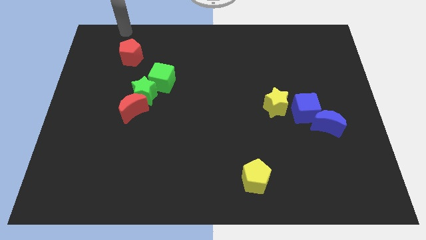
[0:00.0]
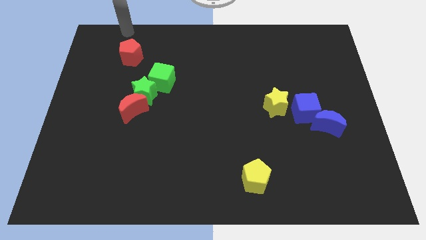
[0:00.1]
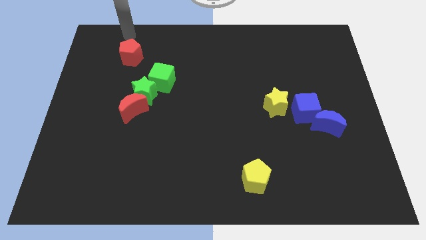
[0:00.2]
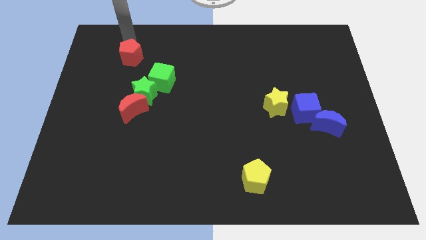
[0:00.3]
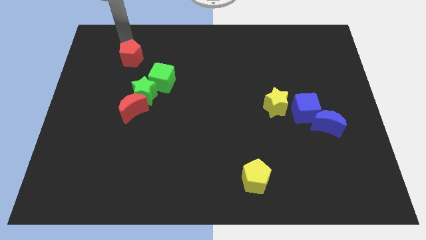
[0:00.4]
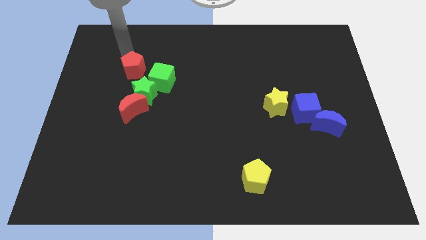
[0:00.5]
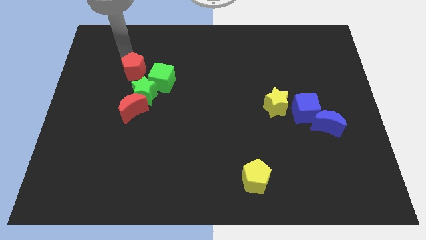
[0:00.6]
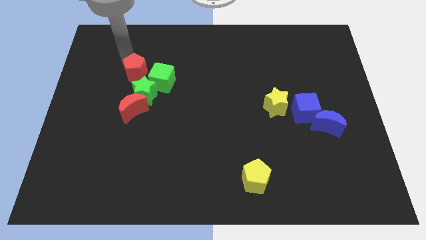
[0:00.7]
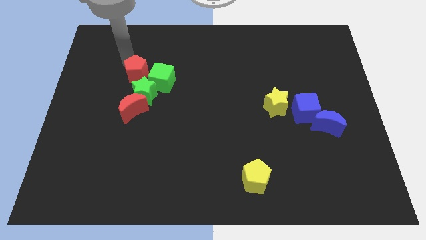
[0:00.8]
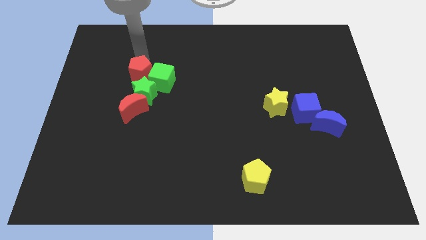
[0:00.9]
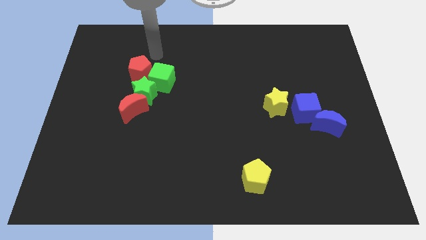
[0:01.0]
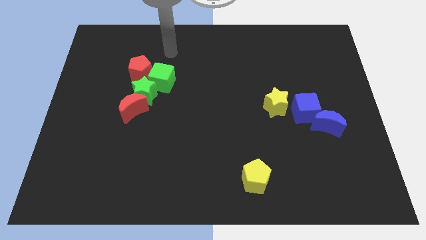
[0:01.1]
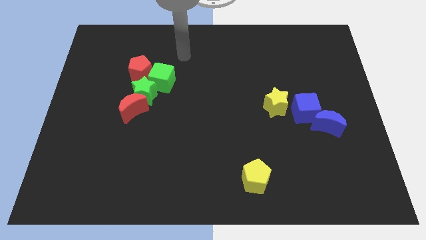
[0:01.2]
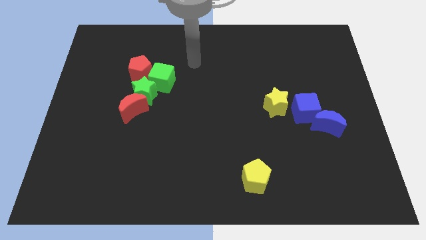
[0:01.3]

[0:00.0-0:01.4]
push the red pentagon towards the green cube

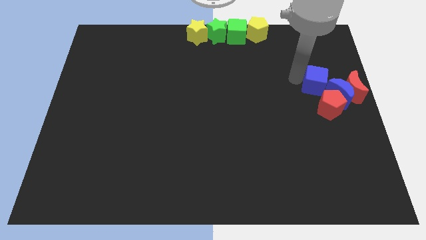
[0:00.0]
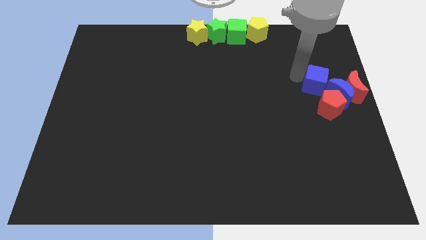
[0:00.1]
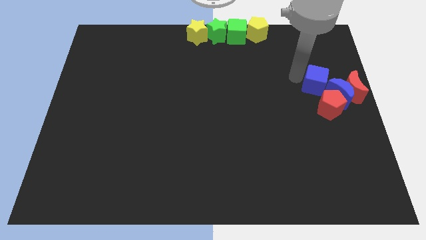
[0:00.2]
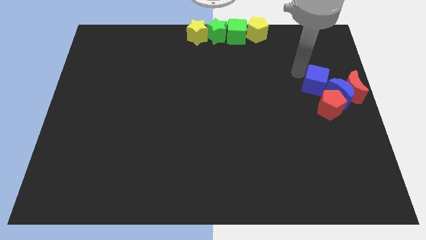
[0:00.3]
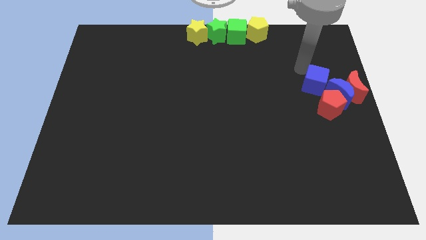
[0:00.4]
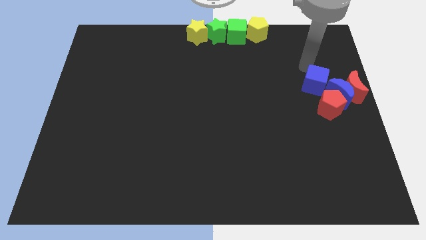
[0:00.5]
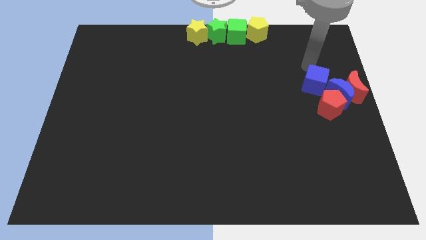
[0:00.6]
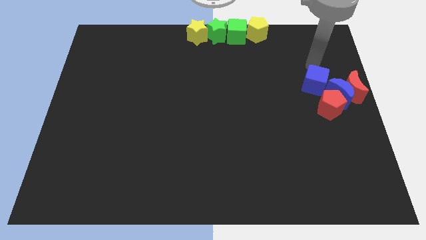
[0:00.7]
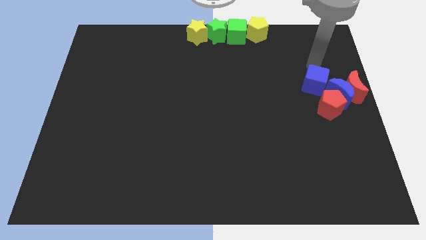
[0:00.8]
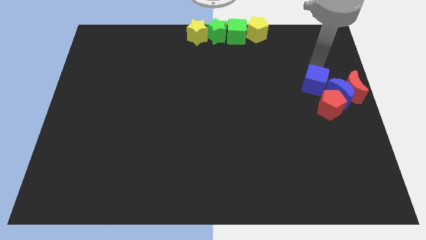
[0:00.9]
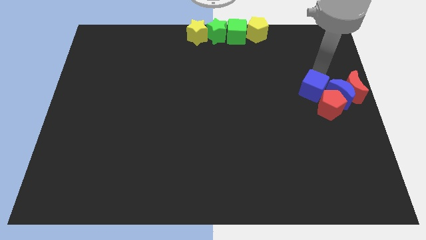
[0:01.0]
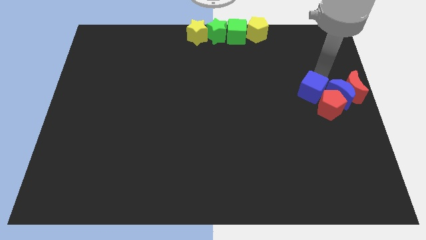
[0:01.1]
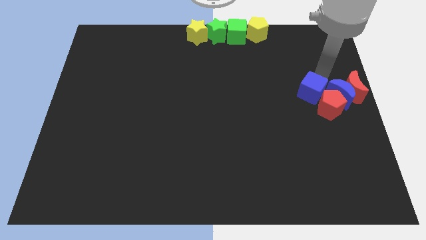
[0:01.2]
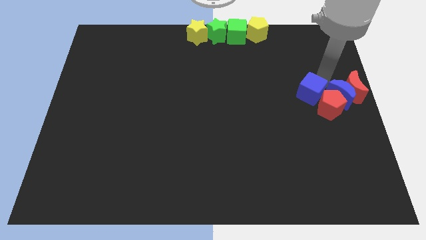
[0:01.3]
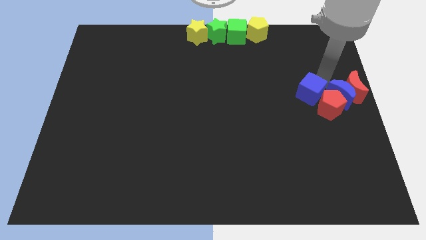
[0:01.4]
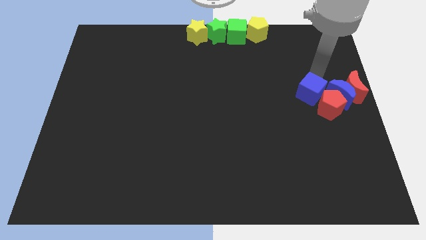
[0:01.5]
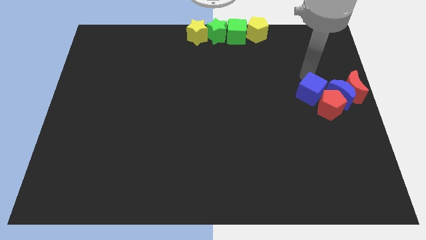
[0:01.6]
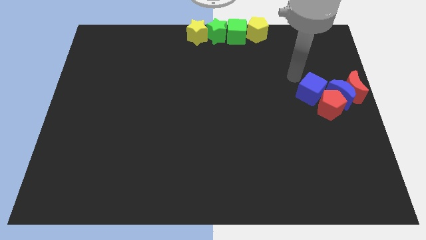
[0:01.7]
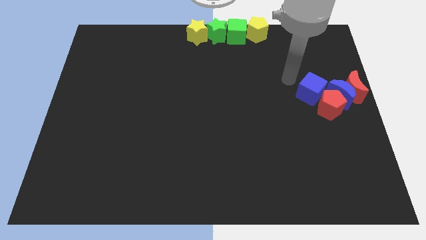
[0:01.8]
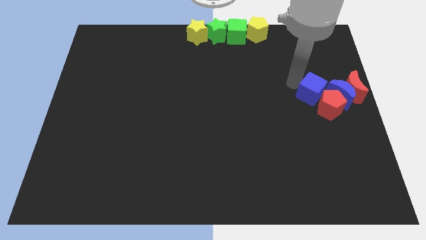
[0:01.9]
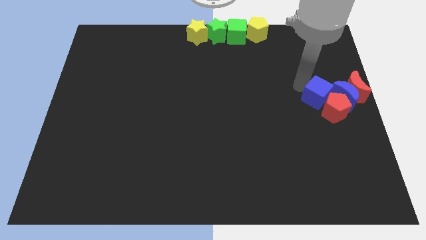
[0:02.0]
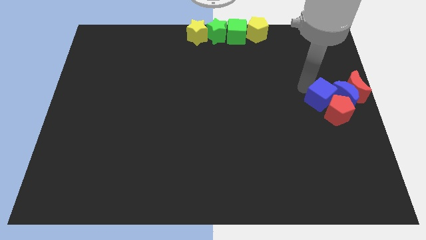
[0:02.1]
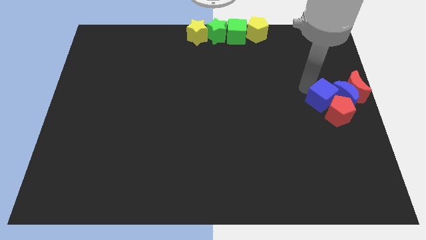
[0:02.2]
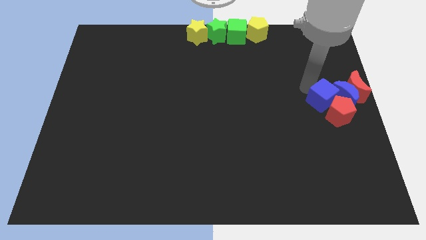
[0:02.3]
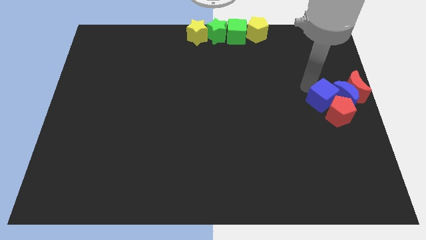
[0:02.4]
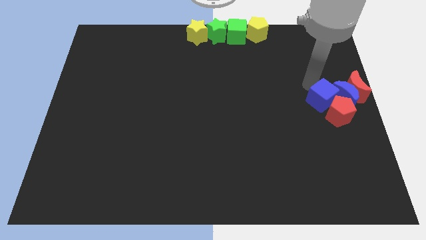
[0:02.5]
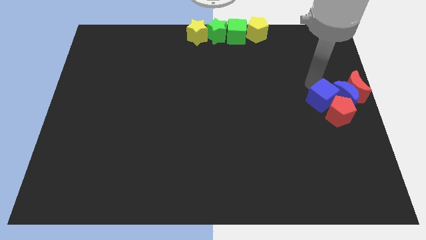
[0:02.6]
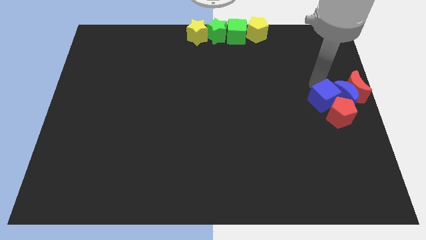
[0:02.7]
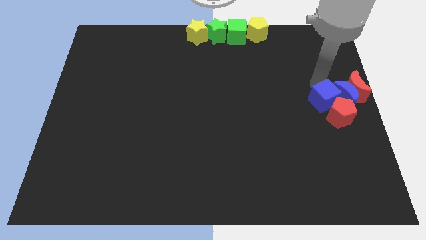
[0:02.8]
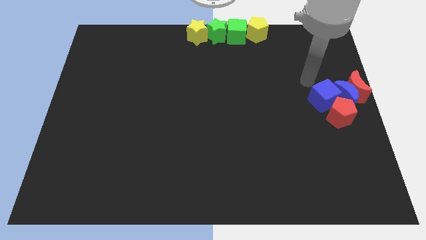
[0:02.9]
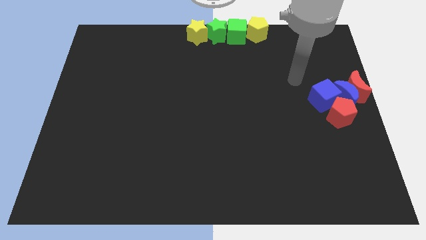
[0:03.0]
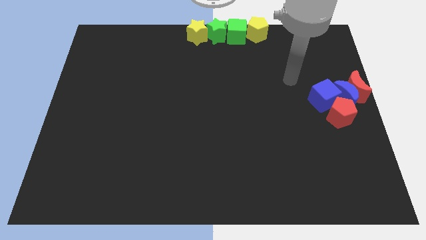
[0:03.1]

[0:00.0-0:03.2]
put two blue blocks along with the red blocks to the right center of the board

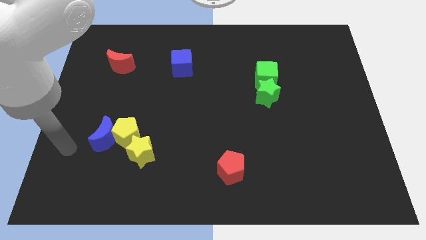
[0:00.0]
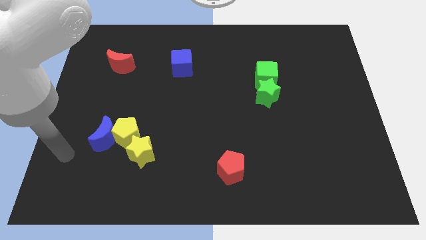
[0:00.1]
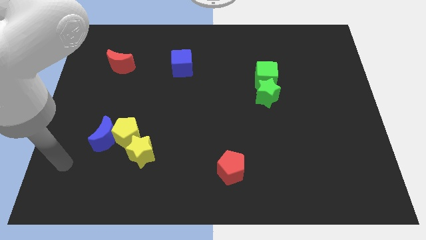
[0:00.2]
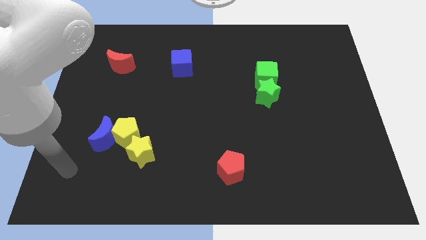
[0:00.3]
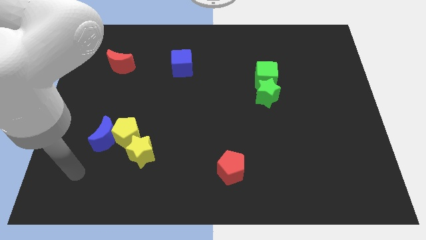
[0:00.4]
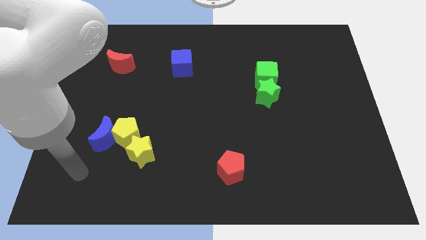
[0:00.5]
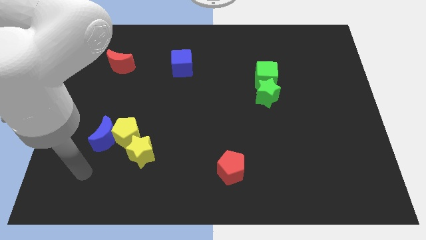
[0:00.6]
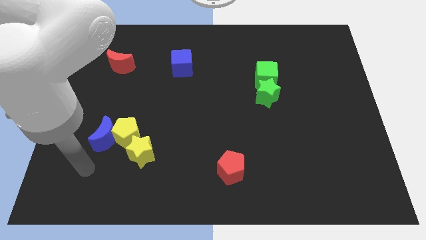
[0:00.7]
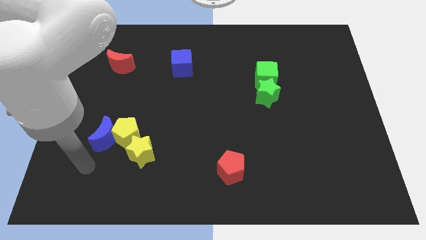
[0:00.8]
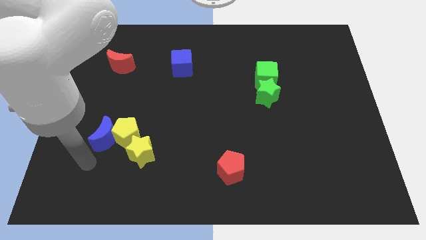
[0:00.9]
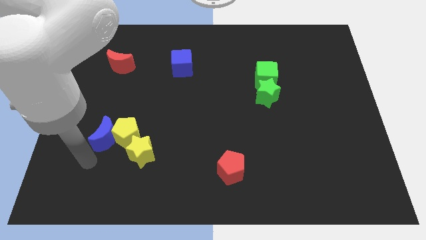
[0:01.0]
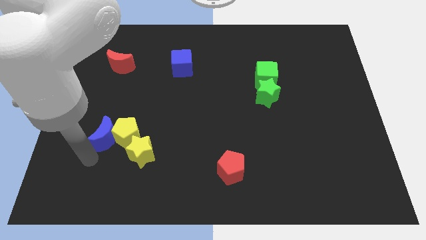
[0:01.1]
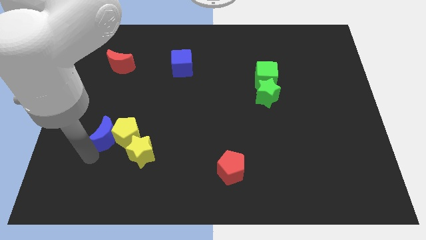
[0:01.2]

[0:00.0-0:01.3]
drag your hand at the bottom of blue crescent

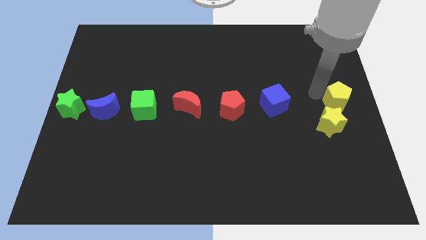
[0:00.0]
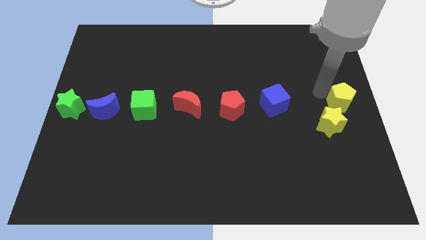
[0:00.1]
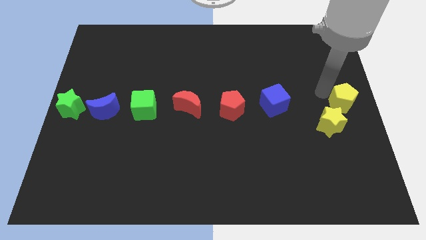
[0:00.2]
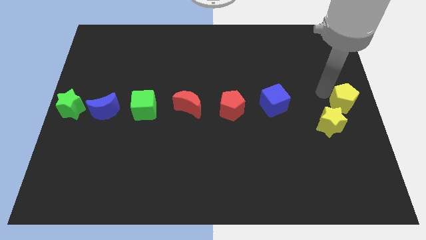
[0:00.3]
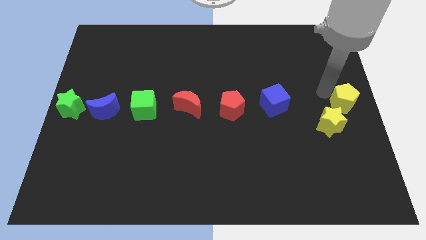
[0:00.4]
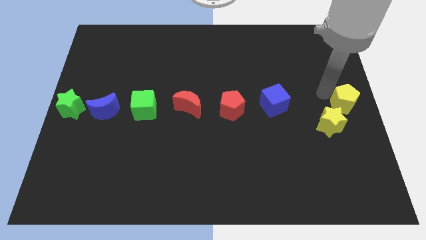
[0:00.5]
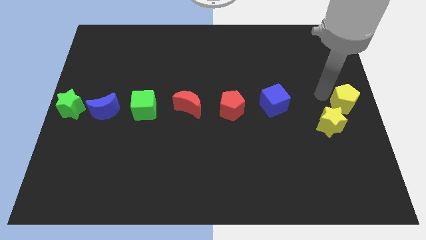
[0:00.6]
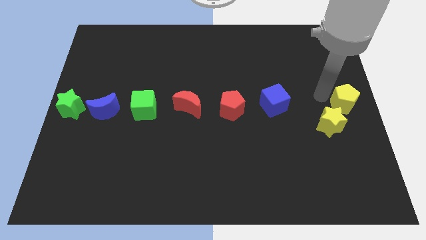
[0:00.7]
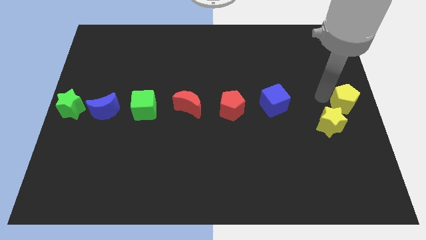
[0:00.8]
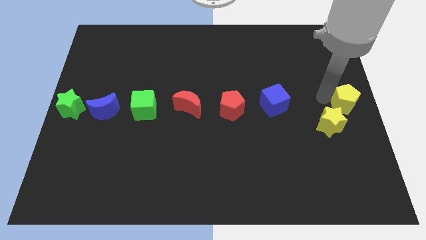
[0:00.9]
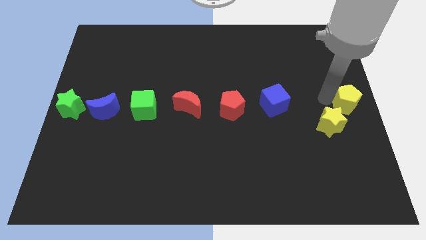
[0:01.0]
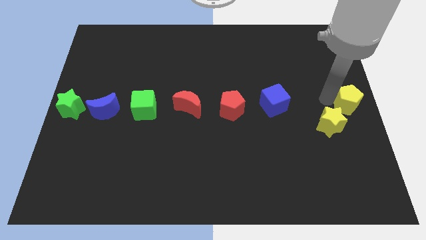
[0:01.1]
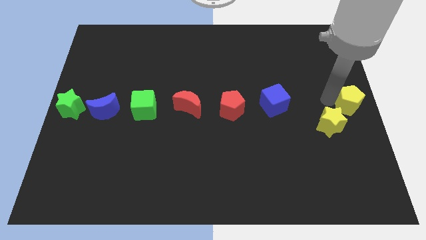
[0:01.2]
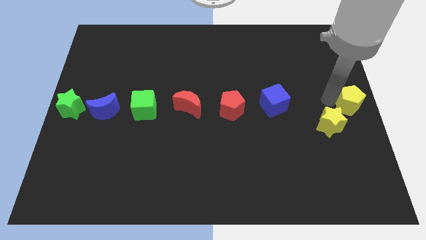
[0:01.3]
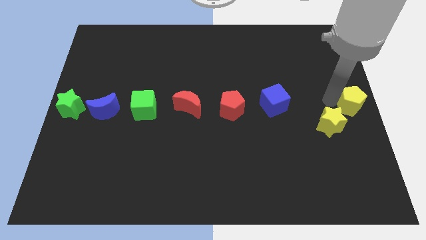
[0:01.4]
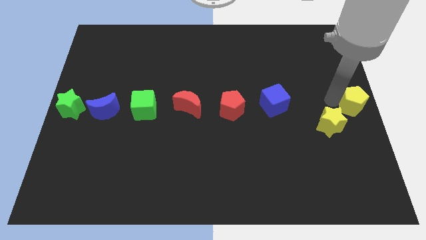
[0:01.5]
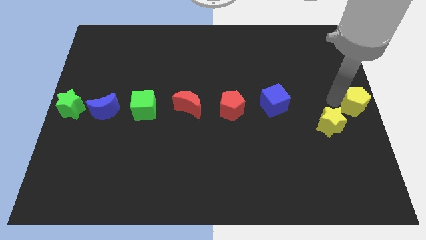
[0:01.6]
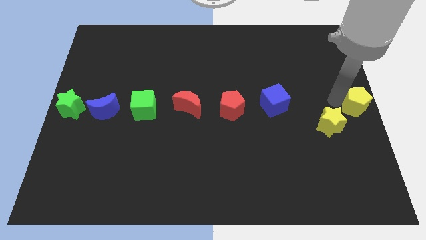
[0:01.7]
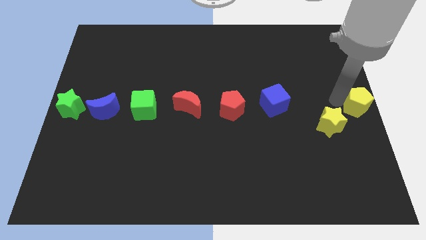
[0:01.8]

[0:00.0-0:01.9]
push the yellow pentagon to the right center of the board

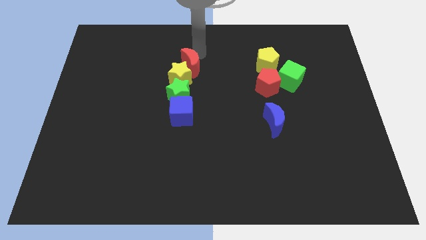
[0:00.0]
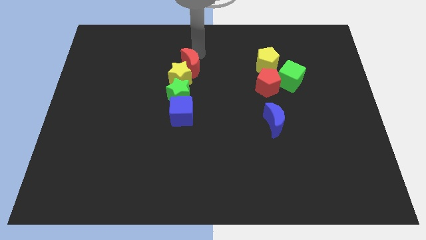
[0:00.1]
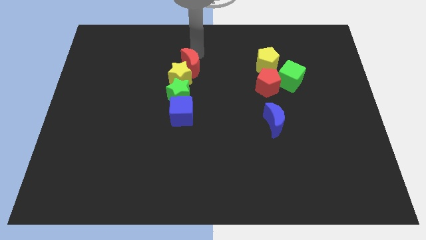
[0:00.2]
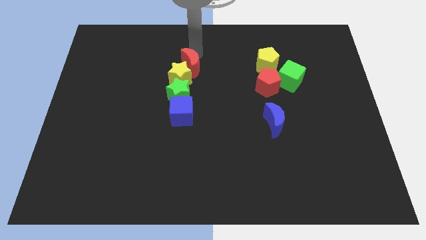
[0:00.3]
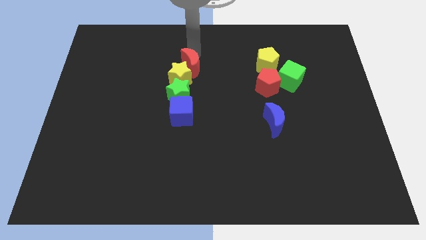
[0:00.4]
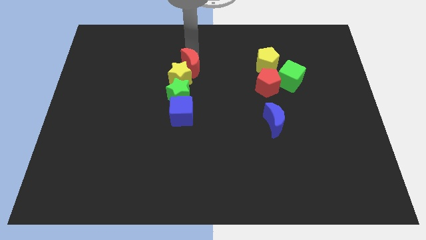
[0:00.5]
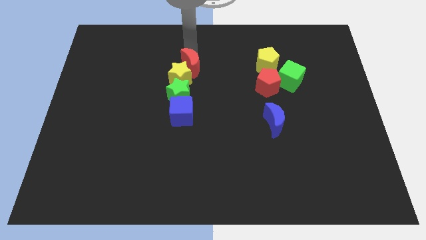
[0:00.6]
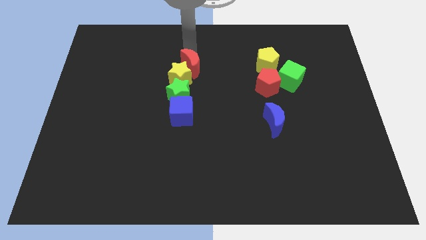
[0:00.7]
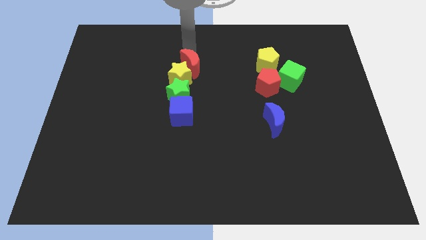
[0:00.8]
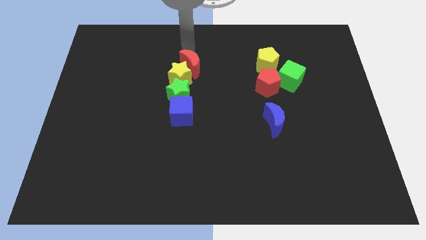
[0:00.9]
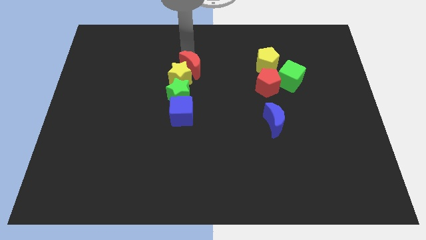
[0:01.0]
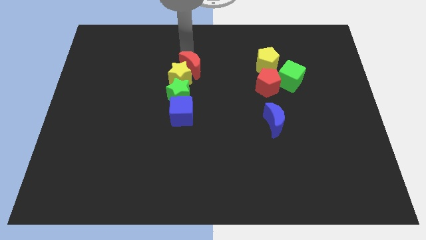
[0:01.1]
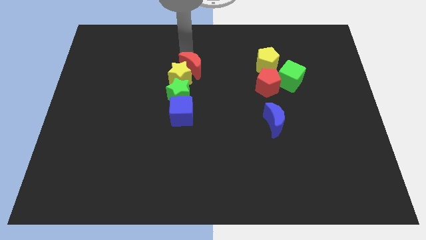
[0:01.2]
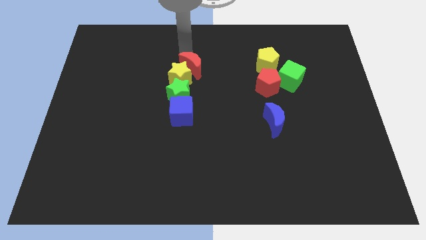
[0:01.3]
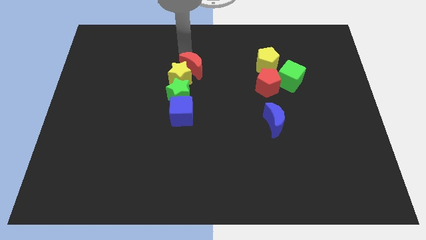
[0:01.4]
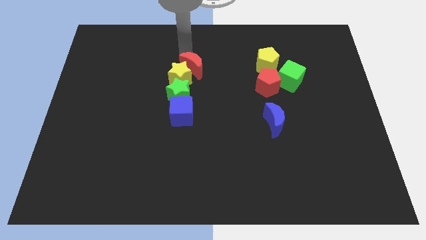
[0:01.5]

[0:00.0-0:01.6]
place the red crescent above the yellow star
